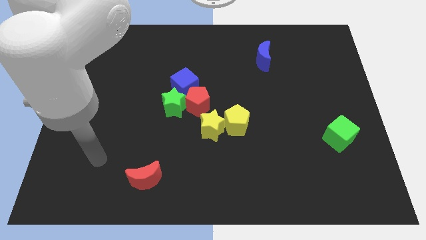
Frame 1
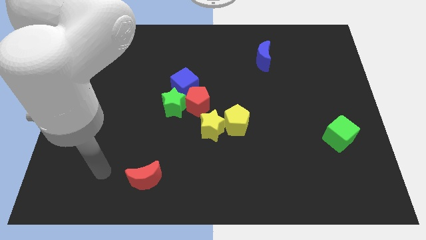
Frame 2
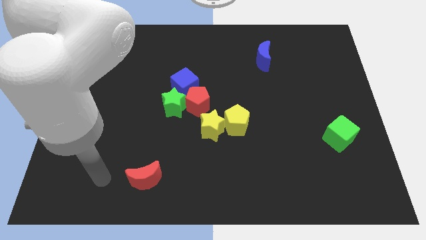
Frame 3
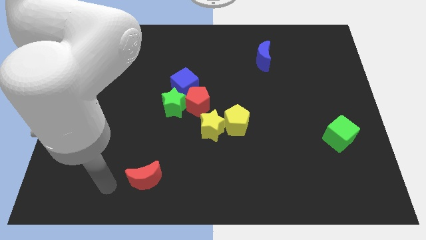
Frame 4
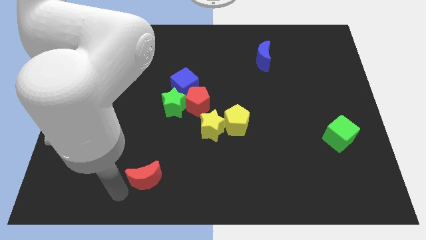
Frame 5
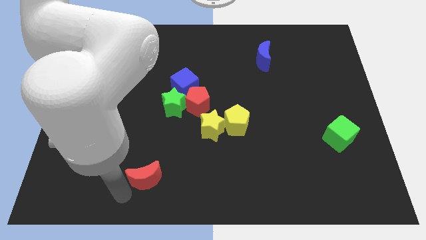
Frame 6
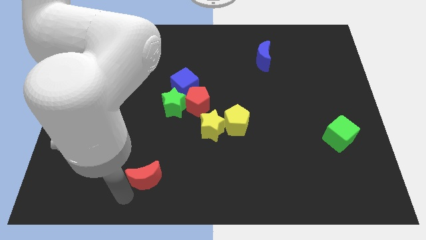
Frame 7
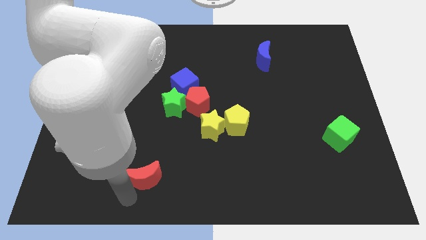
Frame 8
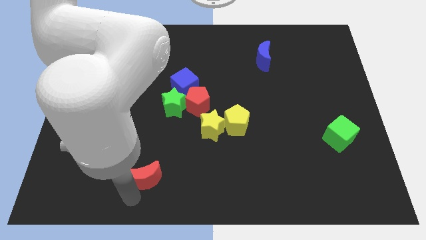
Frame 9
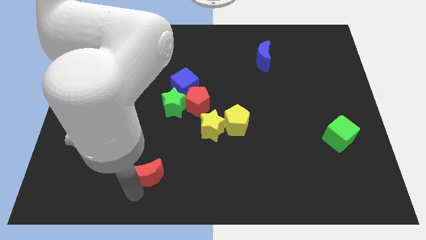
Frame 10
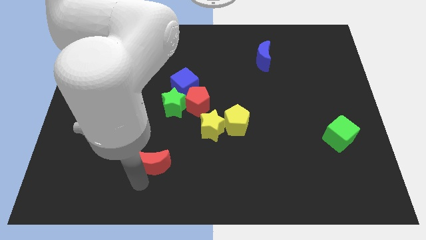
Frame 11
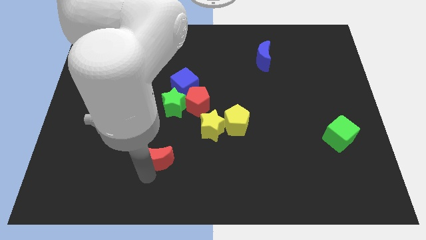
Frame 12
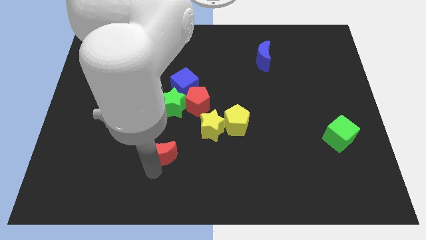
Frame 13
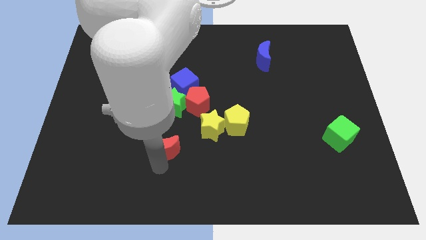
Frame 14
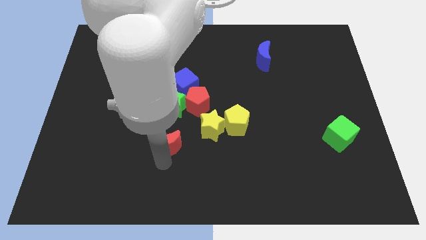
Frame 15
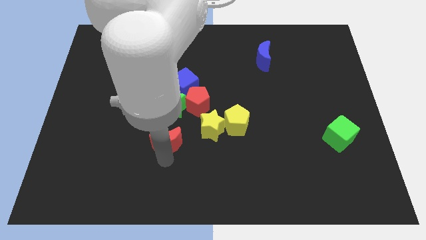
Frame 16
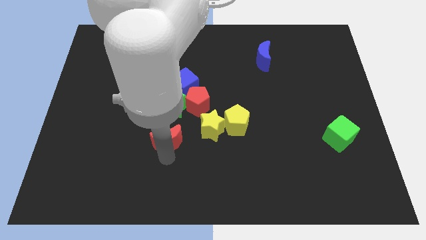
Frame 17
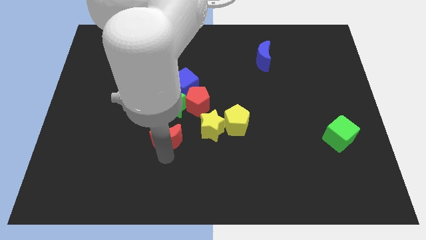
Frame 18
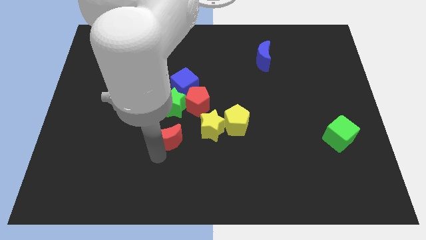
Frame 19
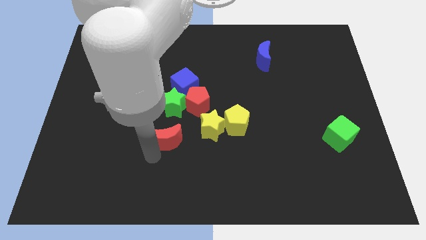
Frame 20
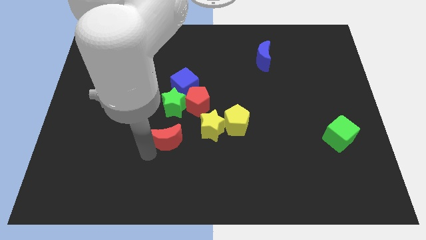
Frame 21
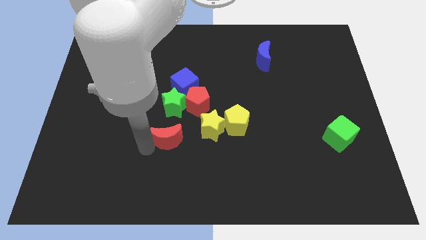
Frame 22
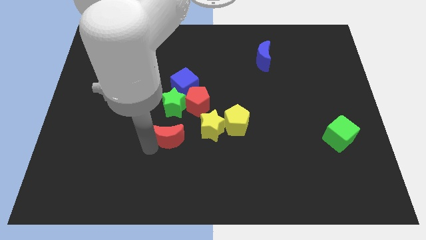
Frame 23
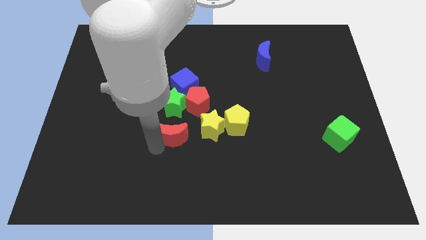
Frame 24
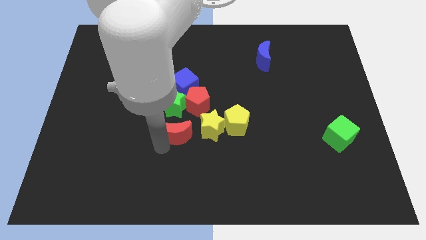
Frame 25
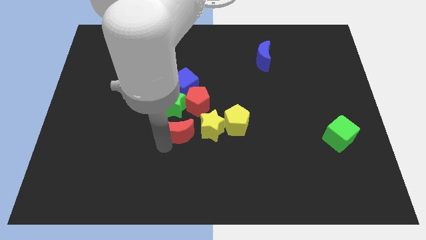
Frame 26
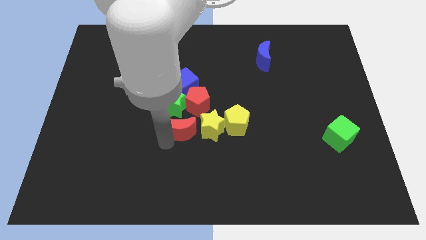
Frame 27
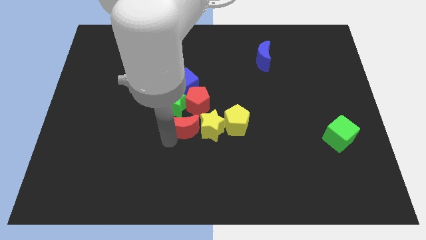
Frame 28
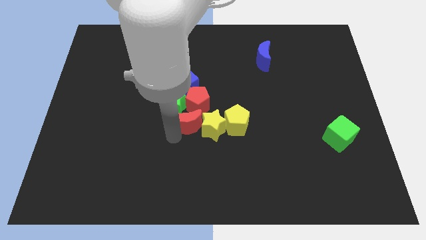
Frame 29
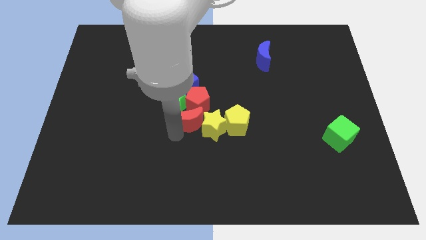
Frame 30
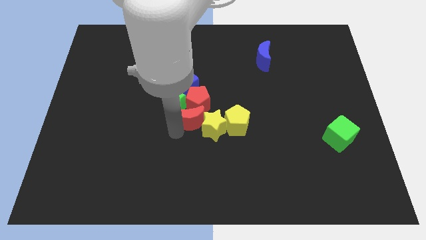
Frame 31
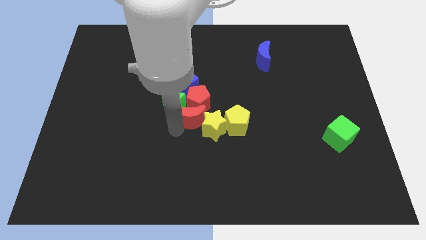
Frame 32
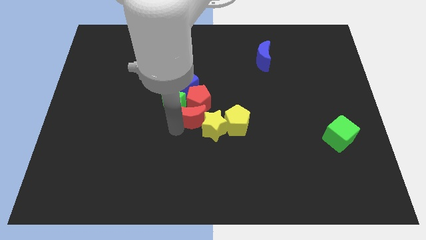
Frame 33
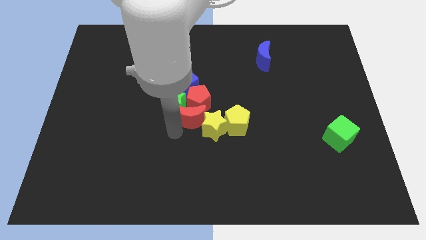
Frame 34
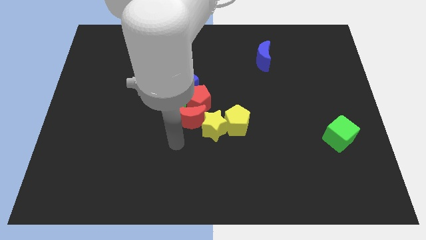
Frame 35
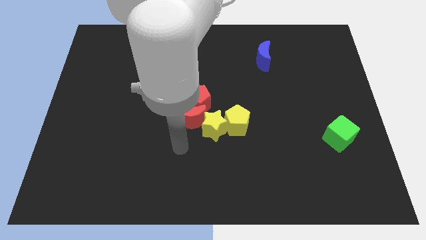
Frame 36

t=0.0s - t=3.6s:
slide the red moon to the bottom side of the red pentagon

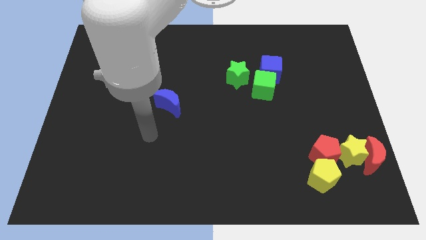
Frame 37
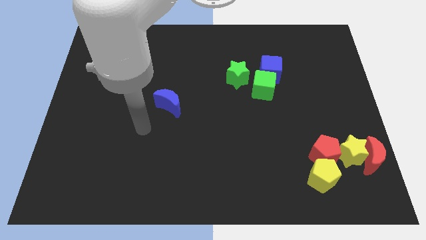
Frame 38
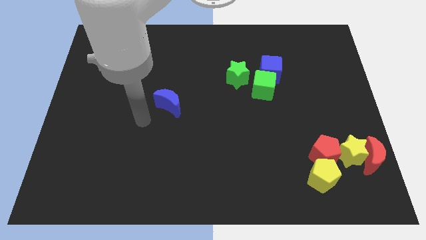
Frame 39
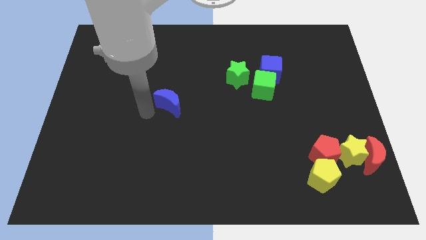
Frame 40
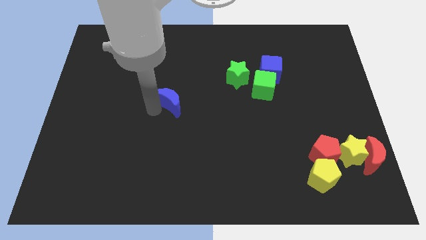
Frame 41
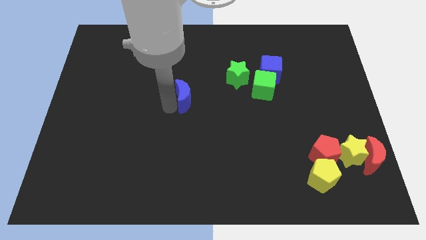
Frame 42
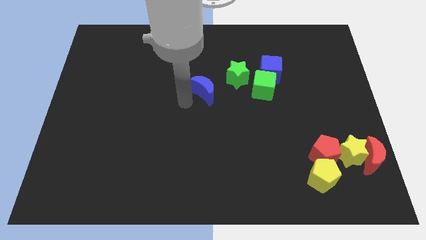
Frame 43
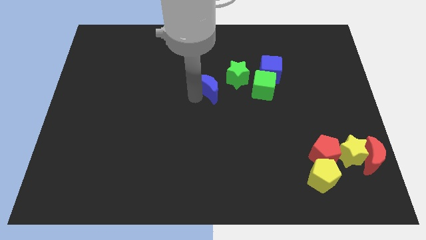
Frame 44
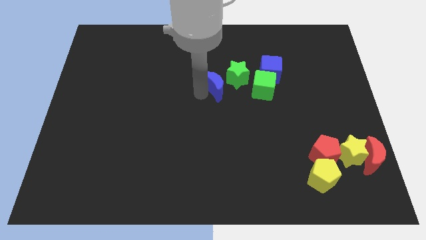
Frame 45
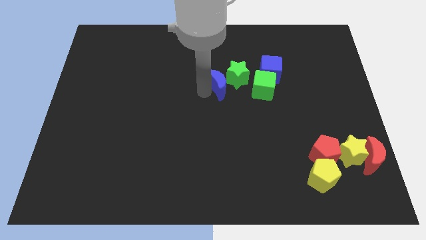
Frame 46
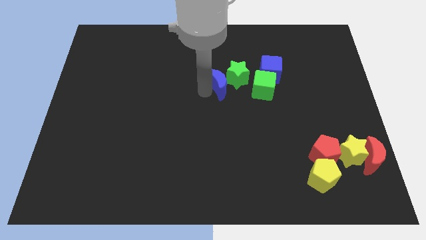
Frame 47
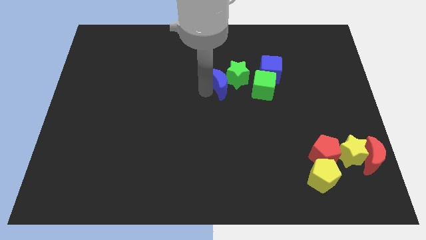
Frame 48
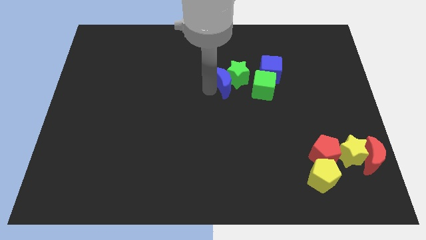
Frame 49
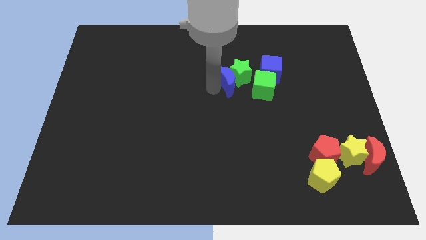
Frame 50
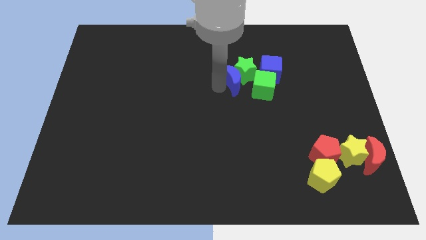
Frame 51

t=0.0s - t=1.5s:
move the blue crescent into the green star

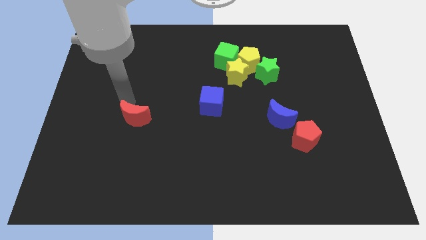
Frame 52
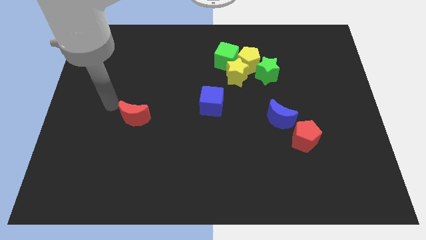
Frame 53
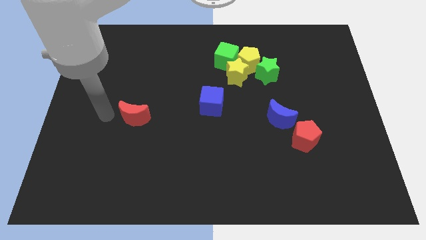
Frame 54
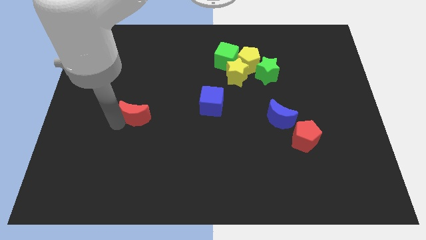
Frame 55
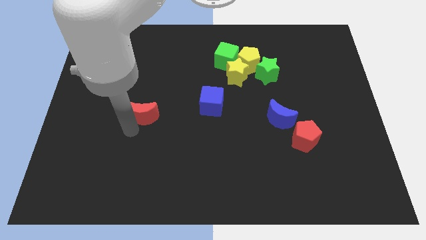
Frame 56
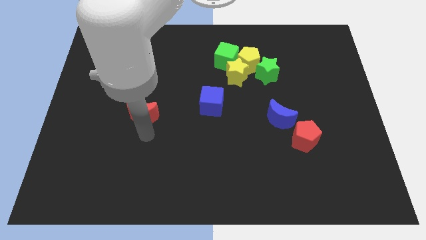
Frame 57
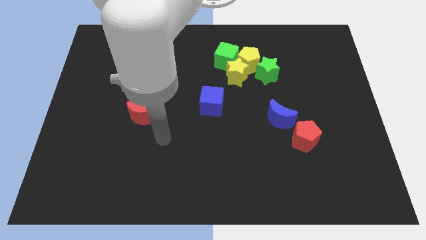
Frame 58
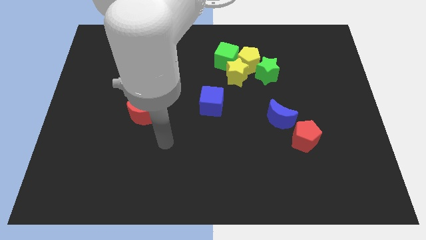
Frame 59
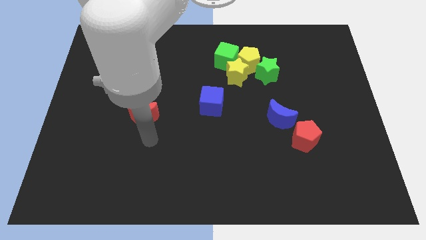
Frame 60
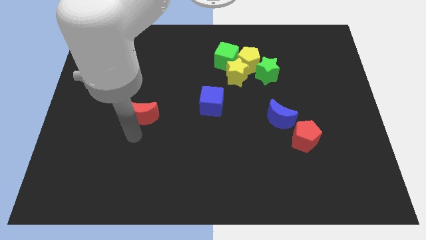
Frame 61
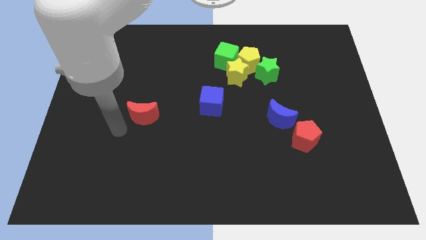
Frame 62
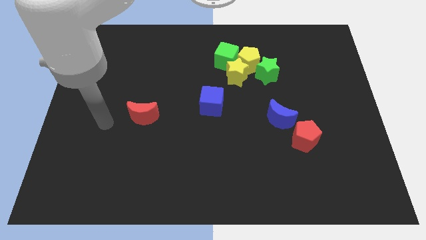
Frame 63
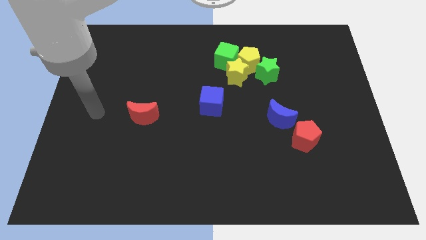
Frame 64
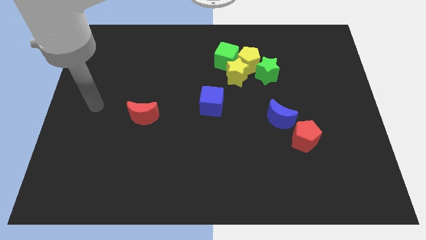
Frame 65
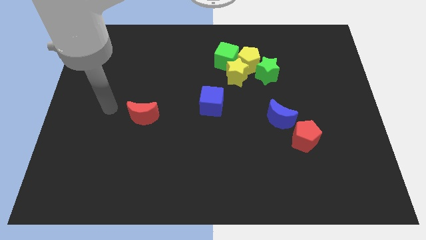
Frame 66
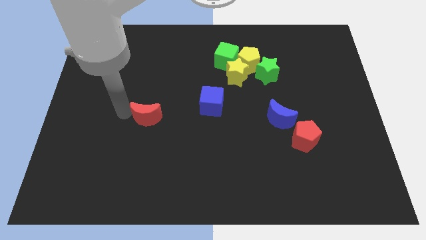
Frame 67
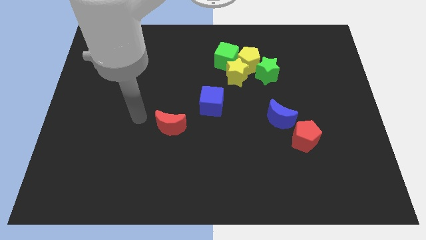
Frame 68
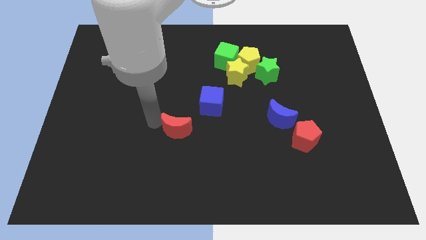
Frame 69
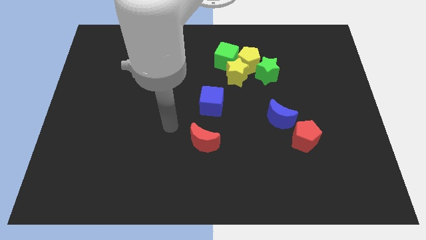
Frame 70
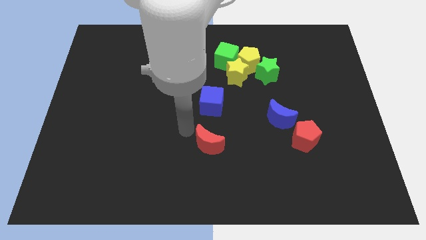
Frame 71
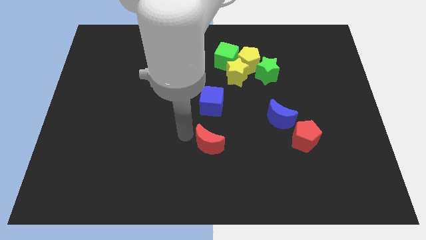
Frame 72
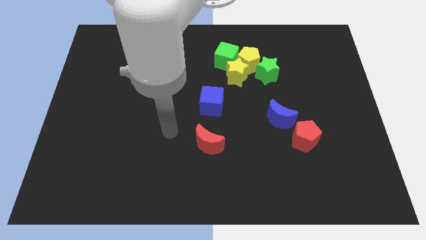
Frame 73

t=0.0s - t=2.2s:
put the red moon vertically below the blue cube

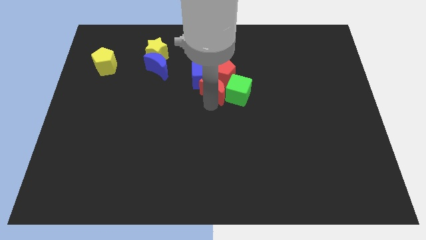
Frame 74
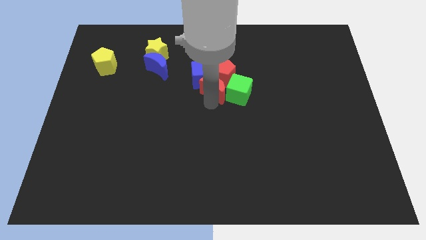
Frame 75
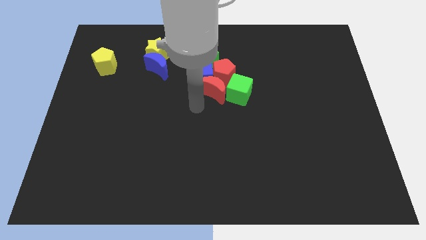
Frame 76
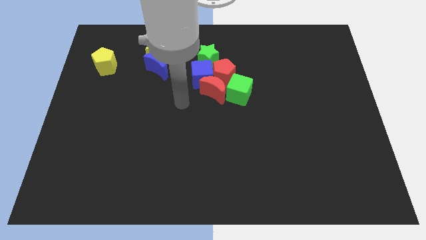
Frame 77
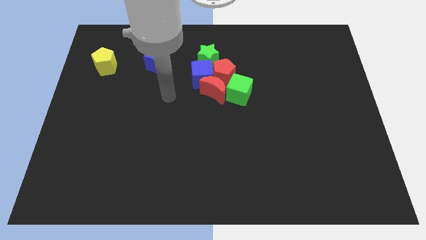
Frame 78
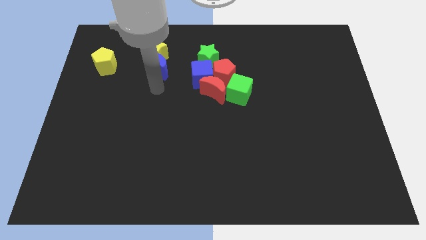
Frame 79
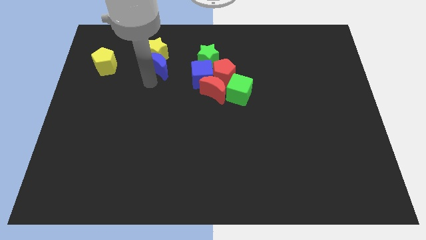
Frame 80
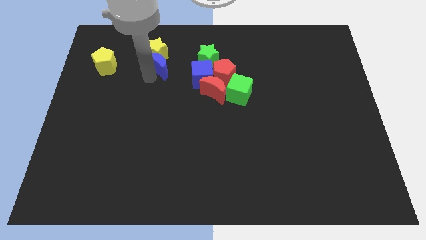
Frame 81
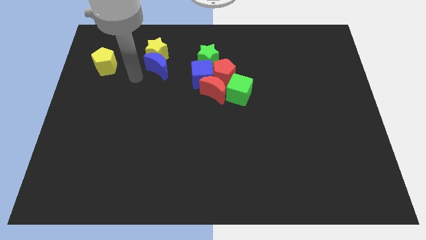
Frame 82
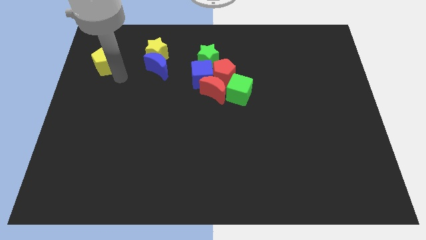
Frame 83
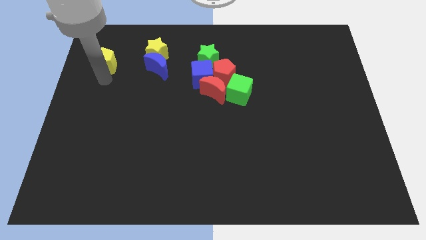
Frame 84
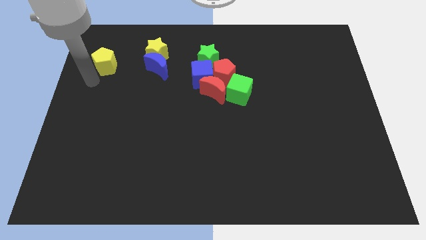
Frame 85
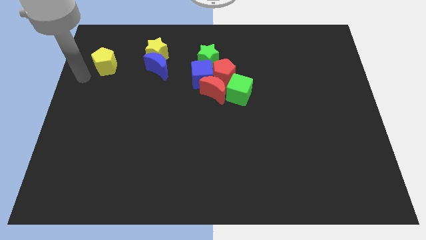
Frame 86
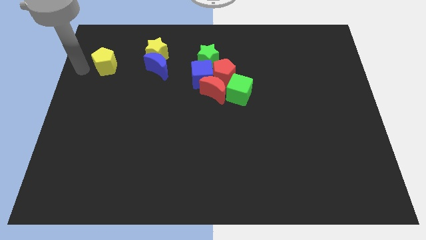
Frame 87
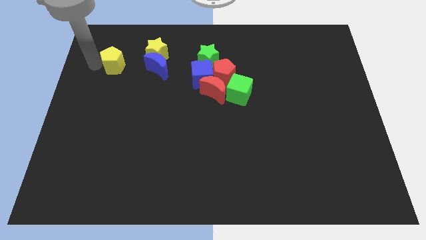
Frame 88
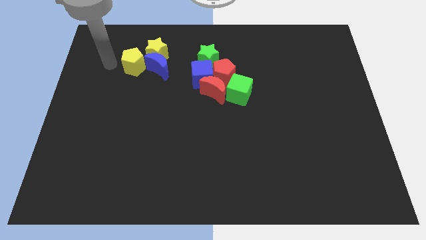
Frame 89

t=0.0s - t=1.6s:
push the yellow pentagon into blue moon and yellow star
